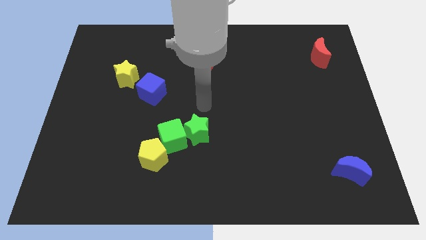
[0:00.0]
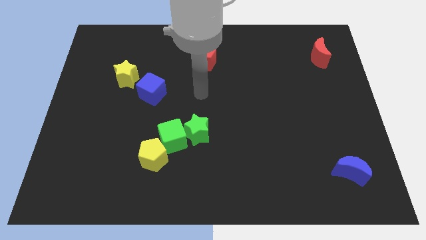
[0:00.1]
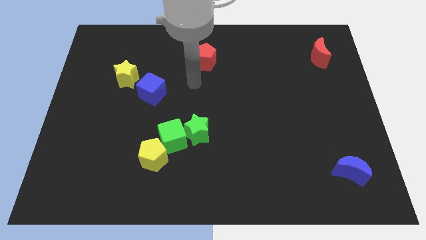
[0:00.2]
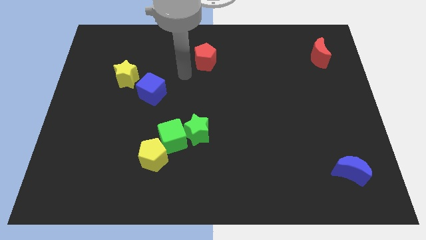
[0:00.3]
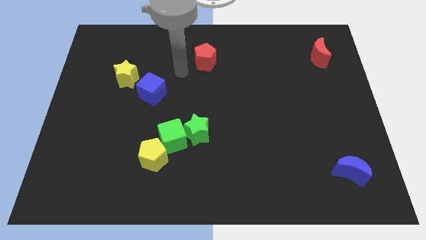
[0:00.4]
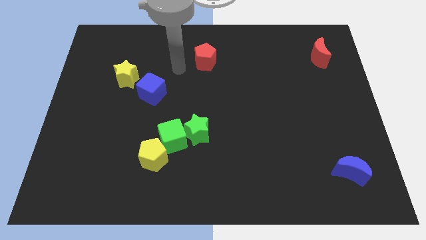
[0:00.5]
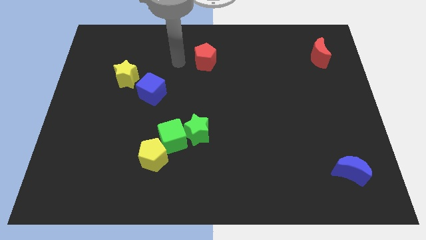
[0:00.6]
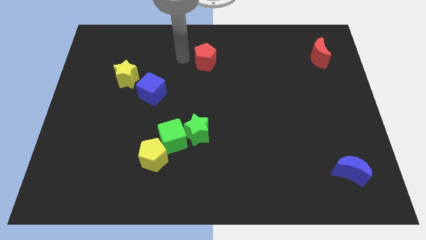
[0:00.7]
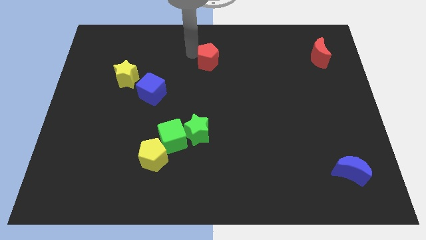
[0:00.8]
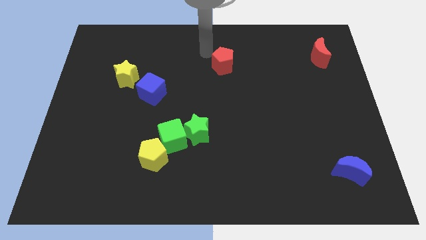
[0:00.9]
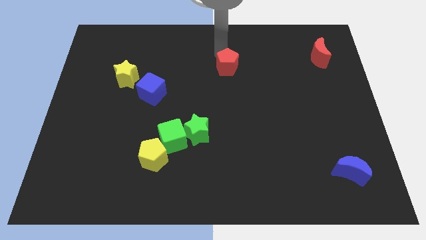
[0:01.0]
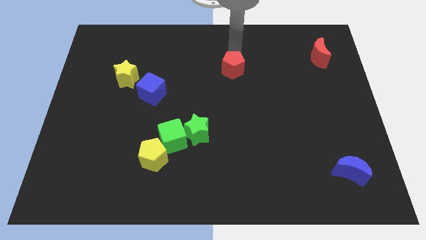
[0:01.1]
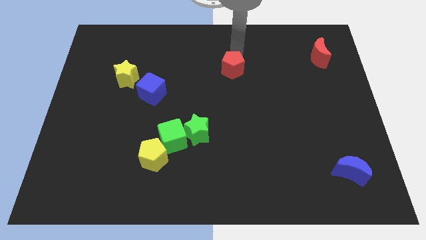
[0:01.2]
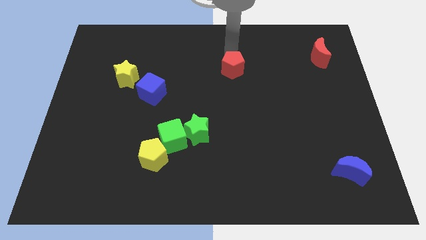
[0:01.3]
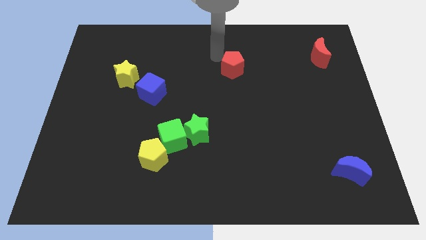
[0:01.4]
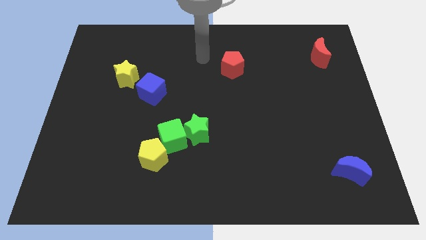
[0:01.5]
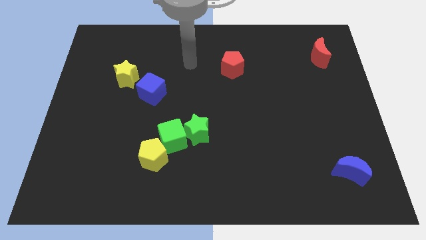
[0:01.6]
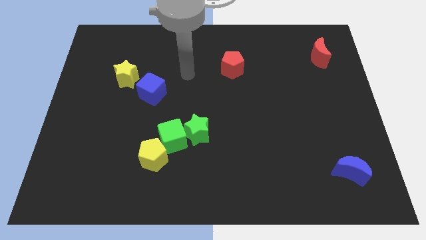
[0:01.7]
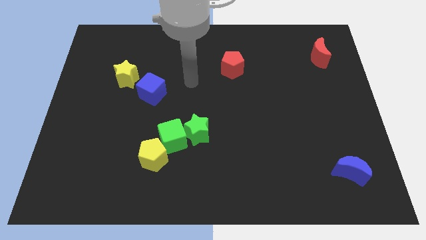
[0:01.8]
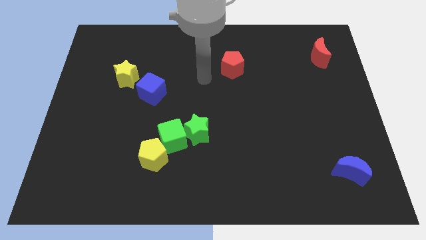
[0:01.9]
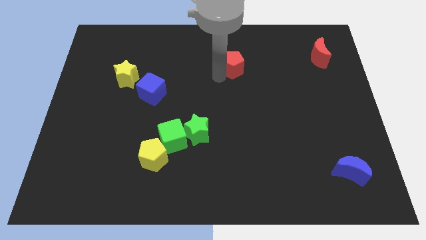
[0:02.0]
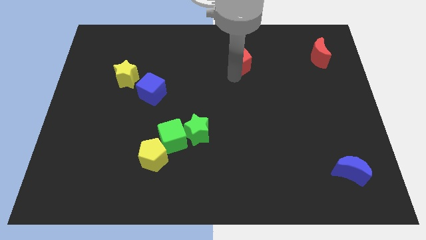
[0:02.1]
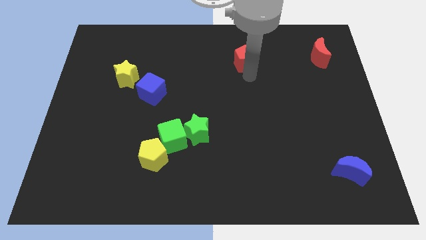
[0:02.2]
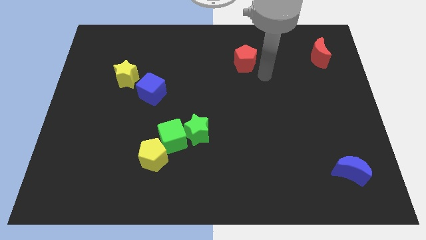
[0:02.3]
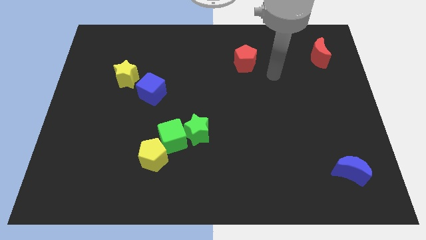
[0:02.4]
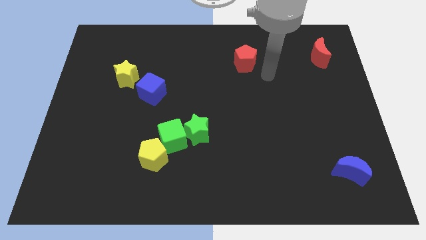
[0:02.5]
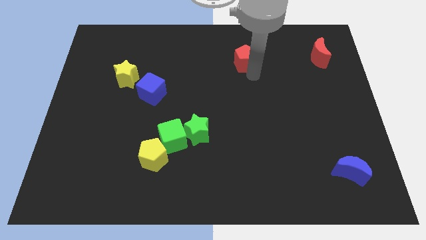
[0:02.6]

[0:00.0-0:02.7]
push the red pentagon towards the red moon

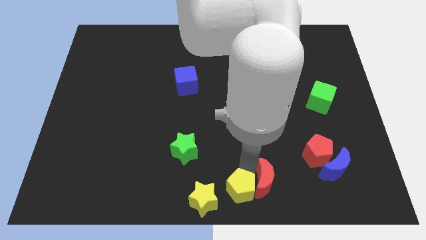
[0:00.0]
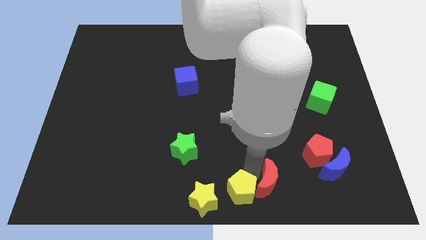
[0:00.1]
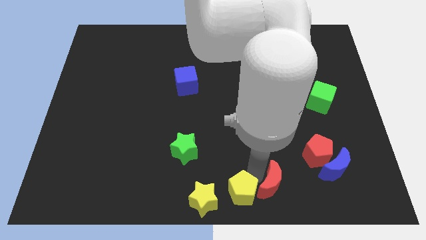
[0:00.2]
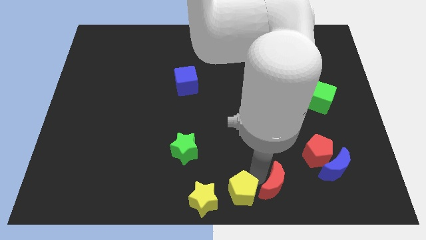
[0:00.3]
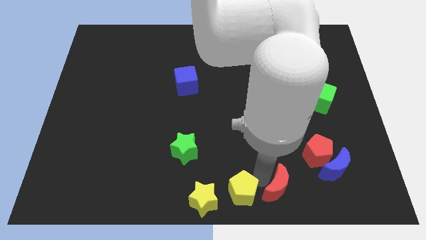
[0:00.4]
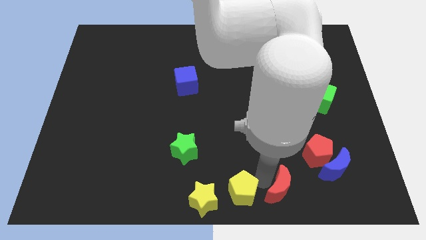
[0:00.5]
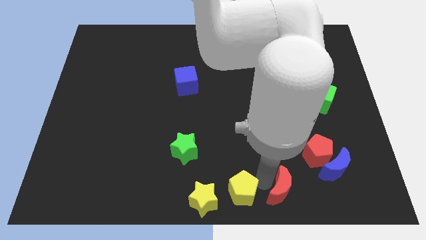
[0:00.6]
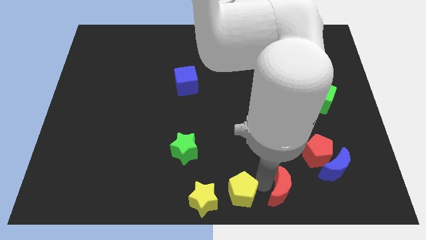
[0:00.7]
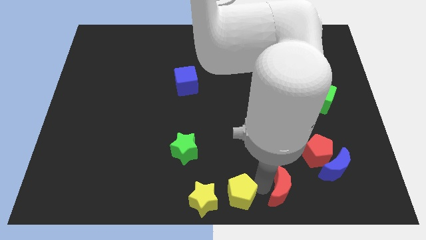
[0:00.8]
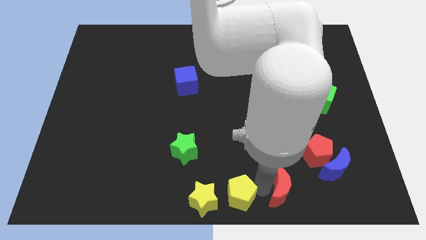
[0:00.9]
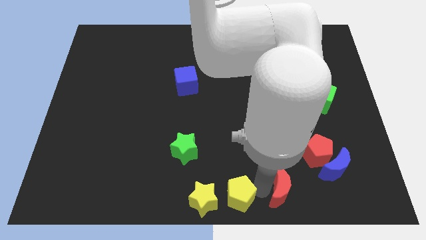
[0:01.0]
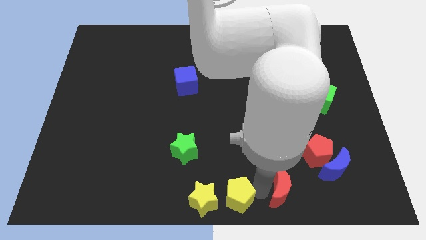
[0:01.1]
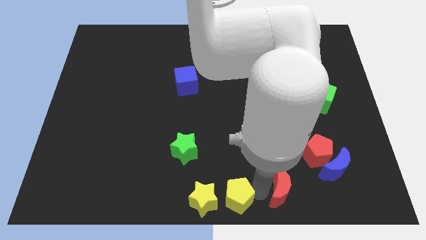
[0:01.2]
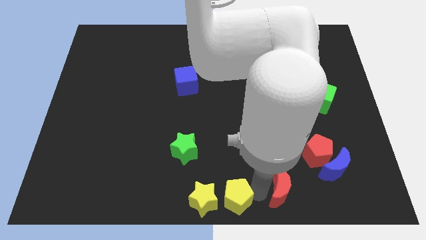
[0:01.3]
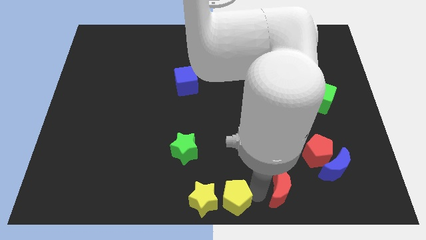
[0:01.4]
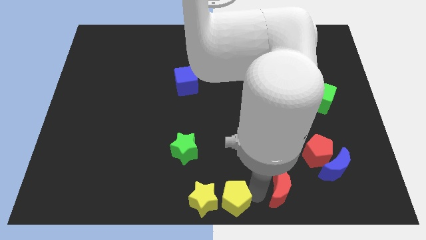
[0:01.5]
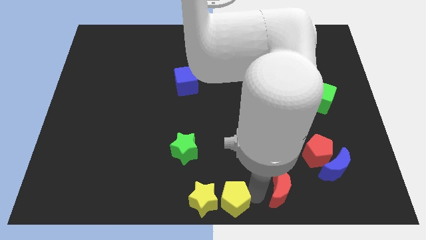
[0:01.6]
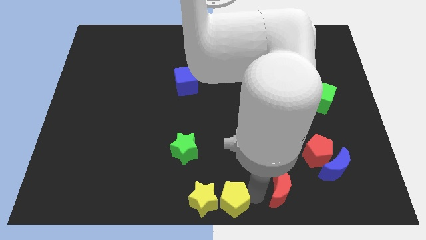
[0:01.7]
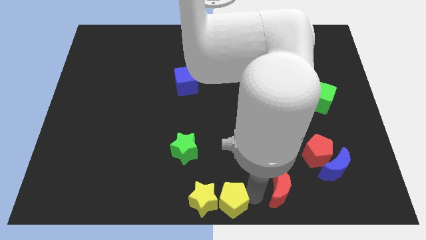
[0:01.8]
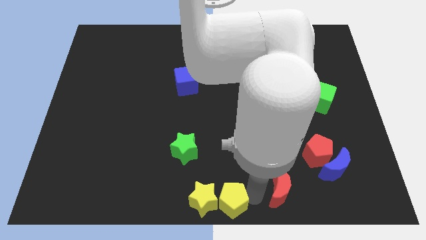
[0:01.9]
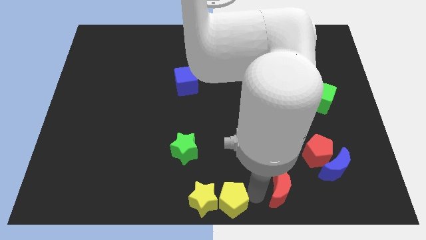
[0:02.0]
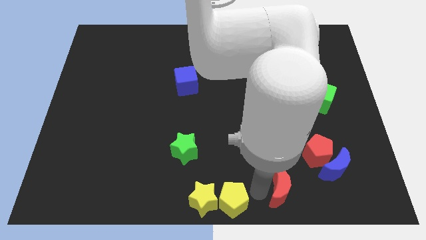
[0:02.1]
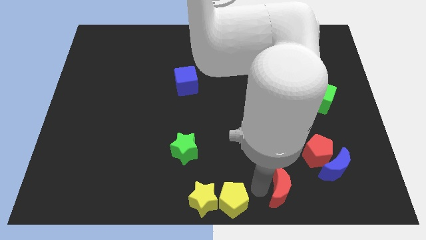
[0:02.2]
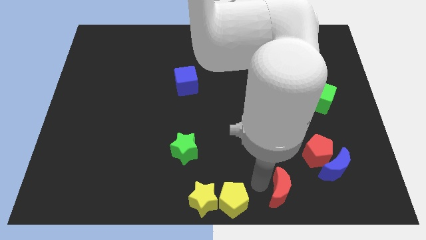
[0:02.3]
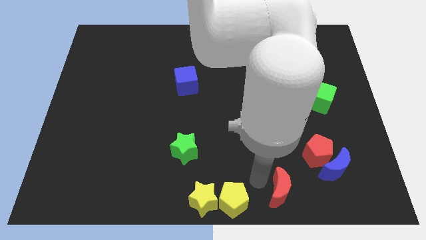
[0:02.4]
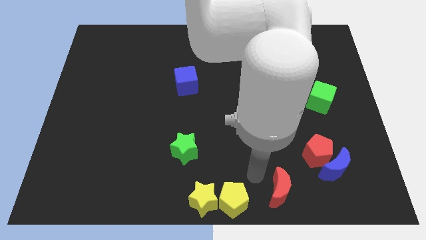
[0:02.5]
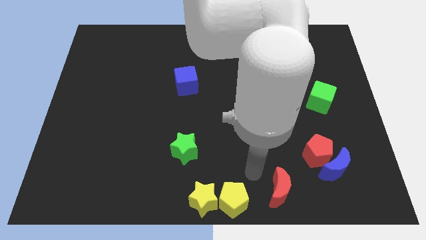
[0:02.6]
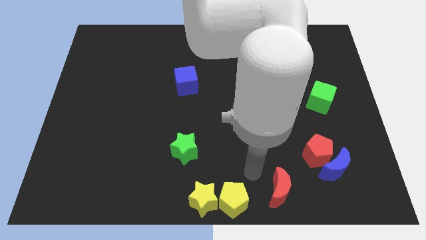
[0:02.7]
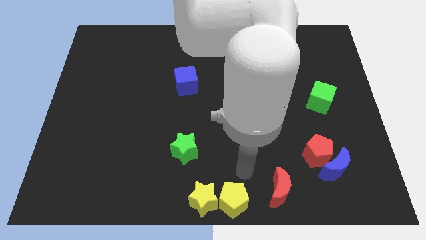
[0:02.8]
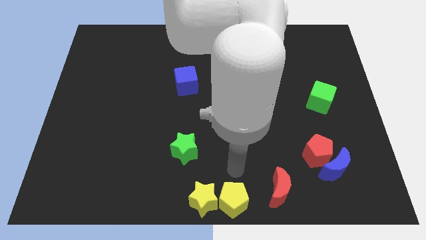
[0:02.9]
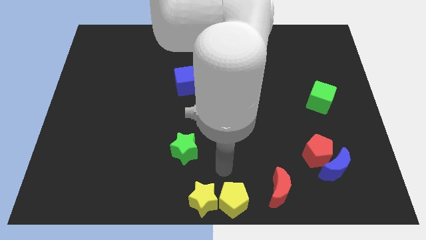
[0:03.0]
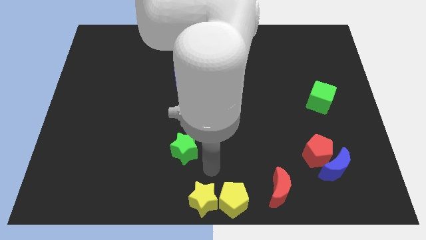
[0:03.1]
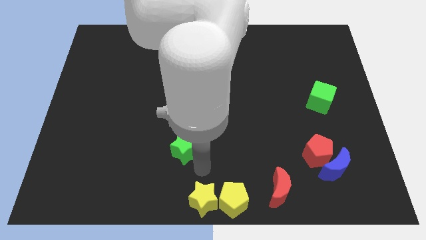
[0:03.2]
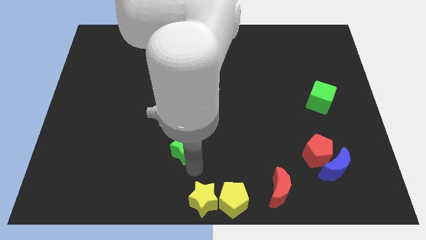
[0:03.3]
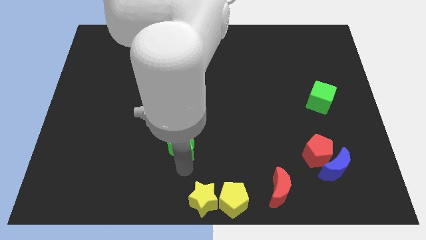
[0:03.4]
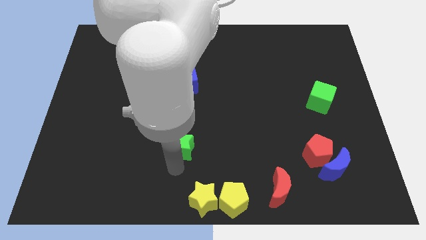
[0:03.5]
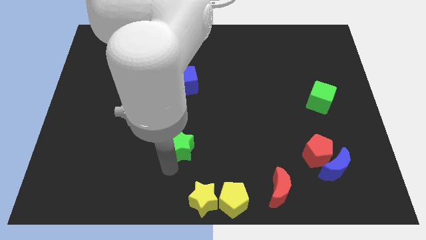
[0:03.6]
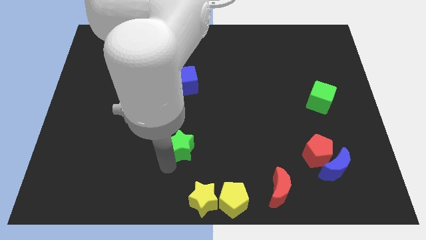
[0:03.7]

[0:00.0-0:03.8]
separate the yellow pentagon and red moon

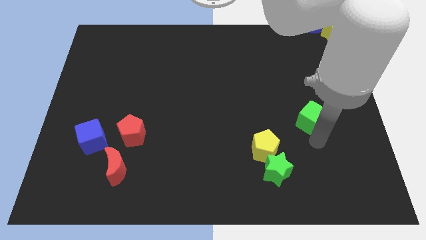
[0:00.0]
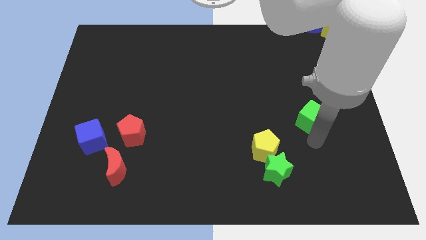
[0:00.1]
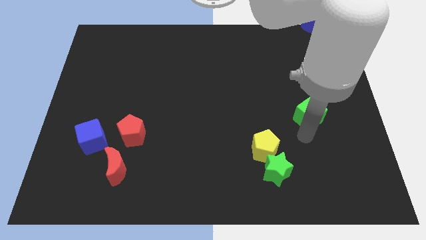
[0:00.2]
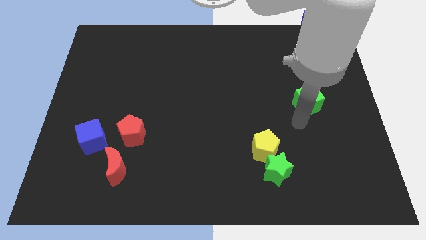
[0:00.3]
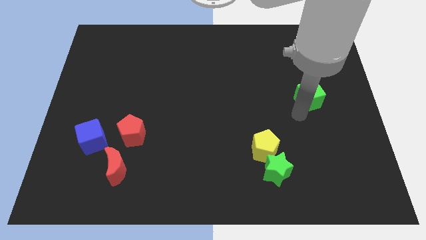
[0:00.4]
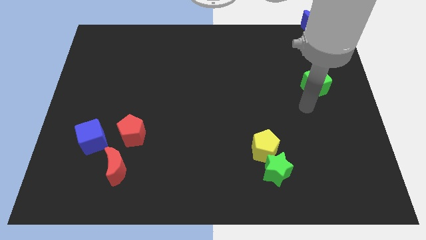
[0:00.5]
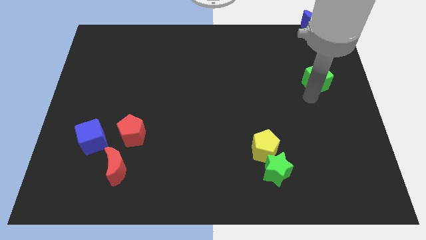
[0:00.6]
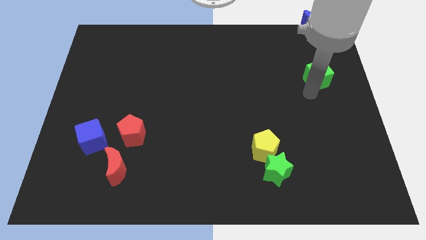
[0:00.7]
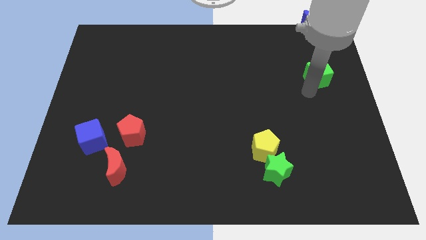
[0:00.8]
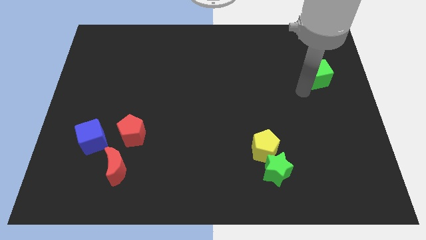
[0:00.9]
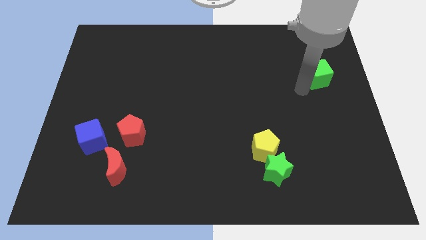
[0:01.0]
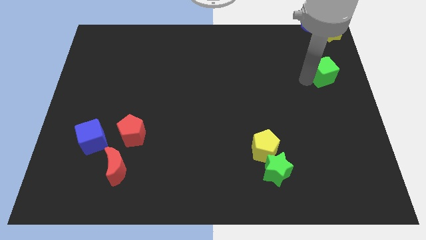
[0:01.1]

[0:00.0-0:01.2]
push the green cube towards the top side of the board

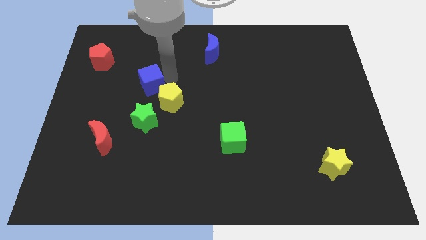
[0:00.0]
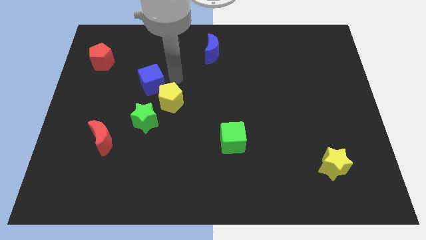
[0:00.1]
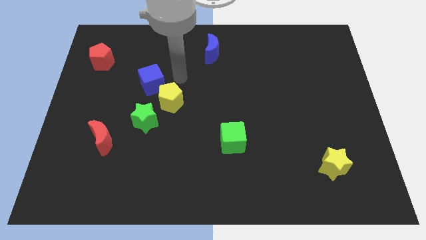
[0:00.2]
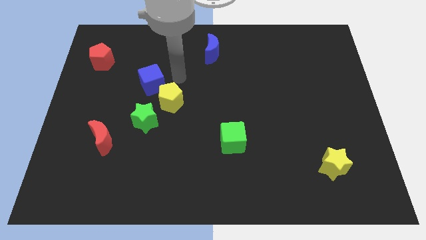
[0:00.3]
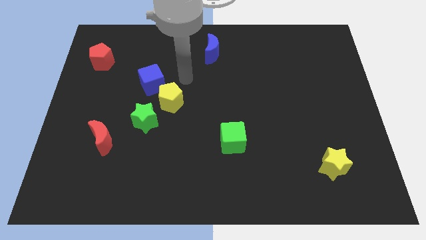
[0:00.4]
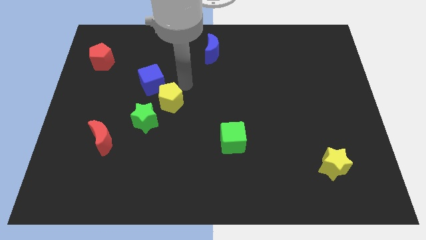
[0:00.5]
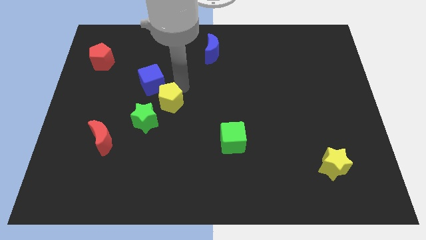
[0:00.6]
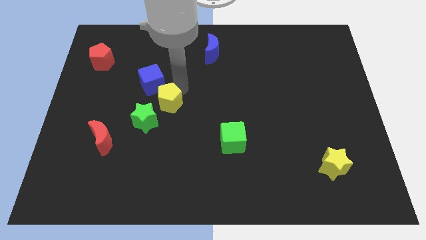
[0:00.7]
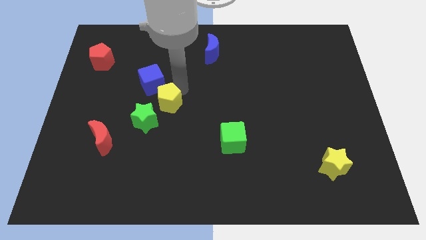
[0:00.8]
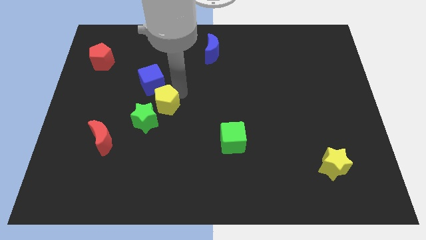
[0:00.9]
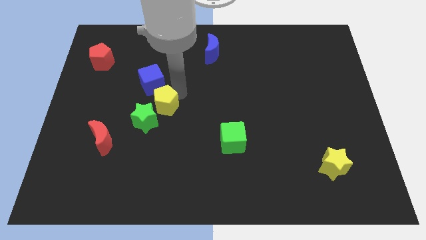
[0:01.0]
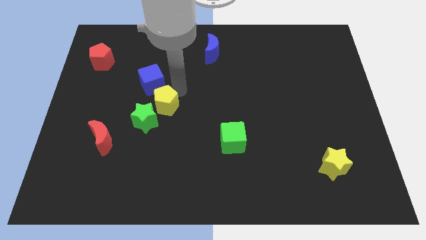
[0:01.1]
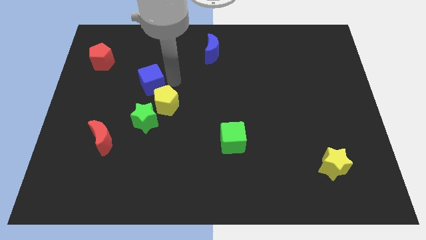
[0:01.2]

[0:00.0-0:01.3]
push the yellow pentagon close to the green star

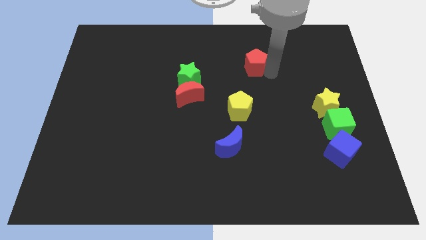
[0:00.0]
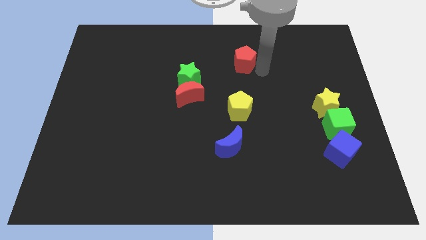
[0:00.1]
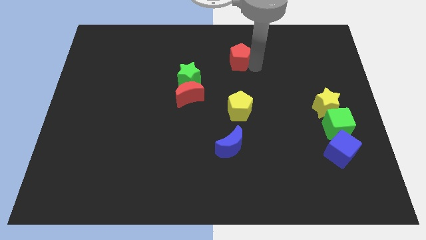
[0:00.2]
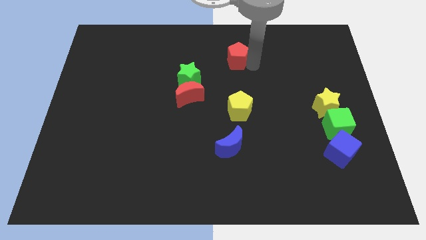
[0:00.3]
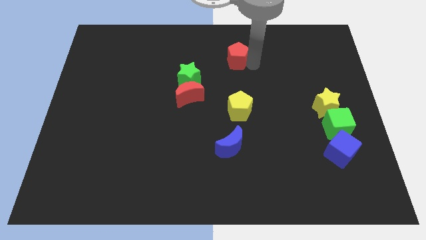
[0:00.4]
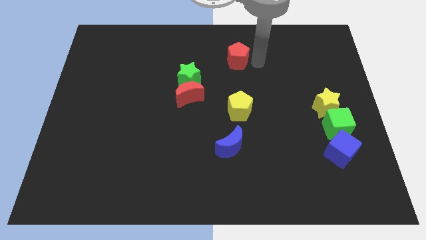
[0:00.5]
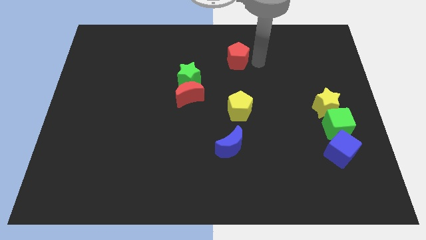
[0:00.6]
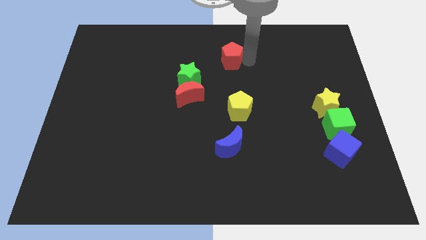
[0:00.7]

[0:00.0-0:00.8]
push the red pentagon to the left of the board
